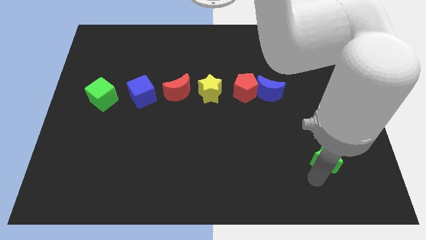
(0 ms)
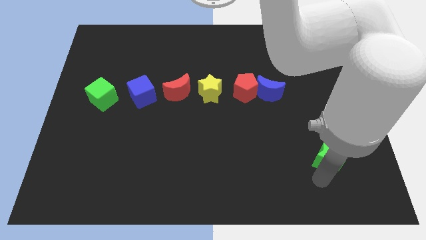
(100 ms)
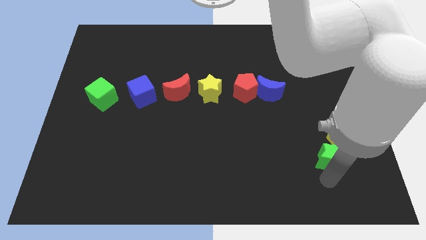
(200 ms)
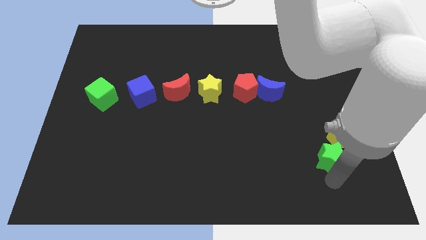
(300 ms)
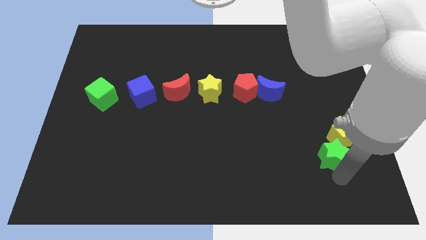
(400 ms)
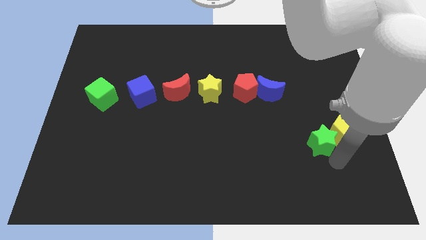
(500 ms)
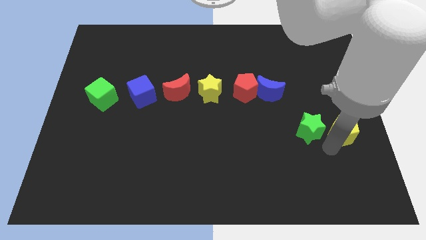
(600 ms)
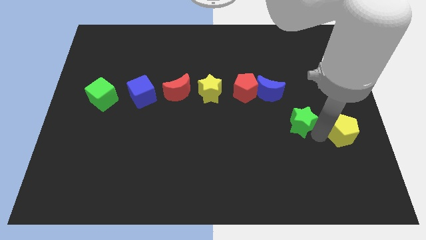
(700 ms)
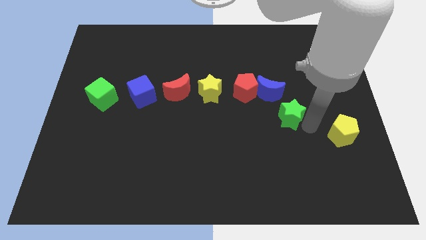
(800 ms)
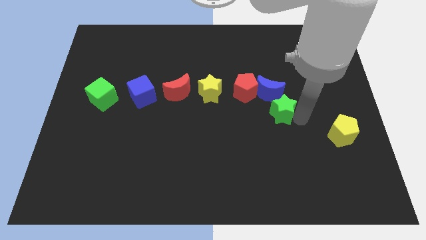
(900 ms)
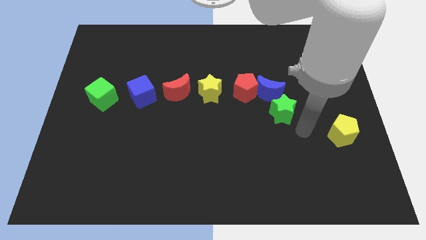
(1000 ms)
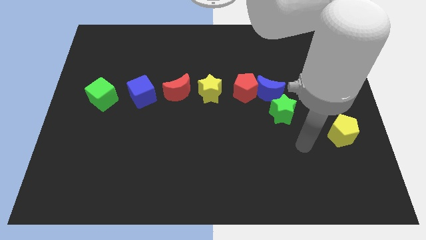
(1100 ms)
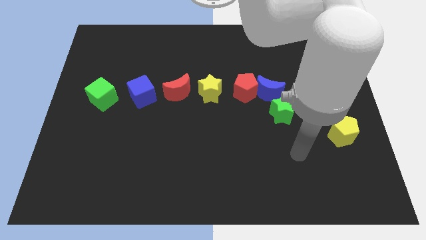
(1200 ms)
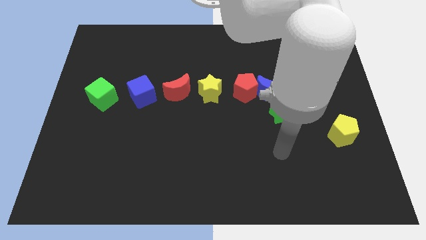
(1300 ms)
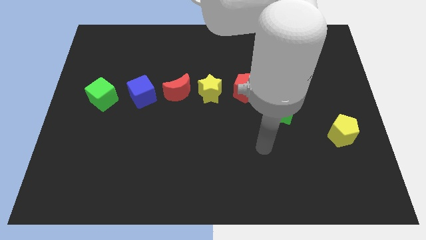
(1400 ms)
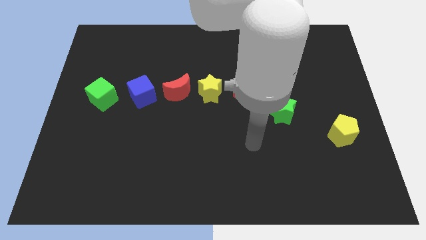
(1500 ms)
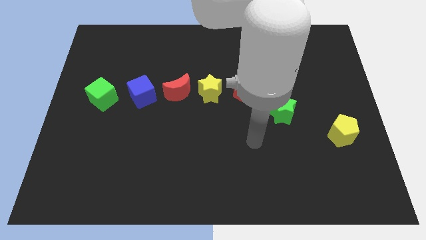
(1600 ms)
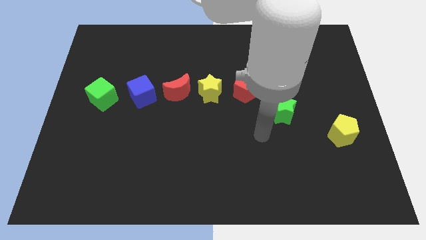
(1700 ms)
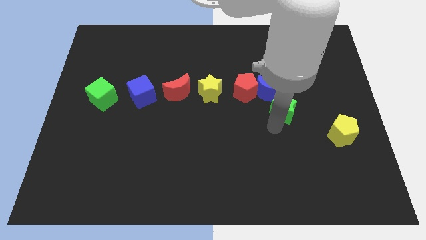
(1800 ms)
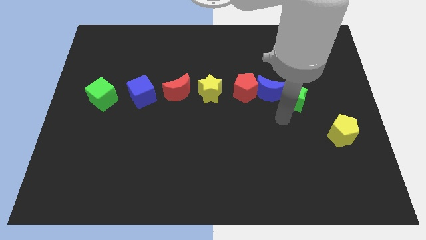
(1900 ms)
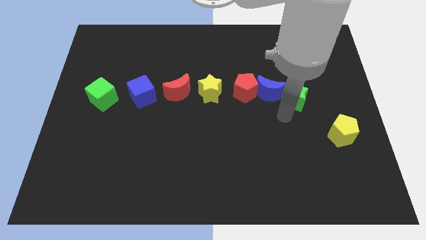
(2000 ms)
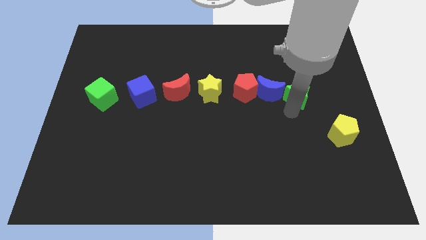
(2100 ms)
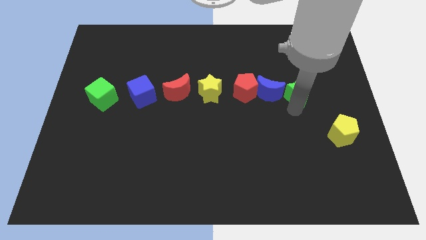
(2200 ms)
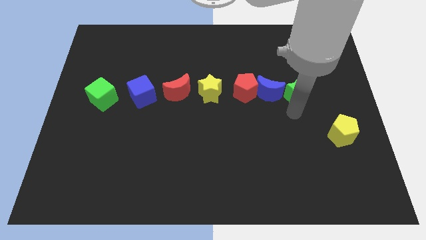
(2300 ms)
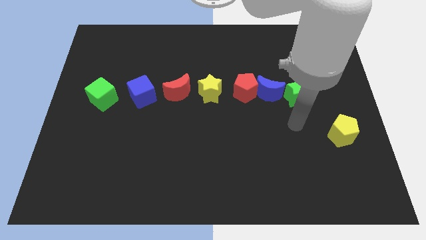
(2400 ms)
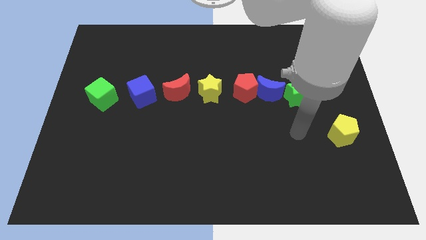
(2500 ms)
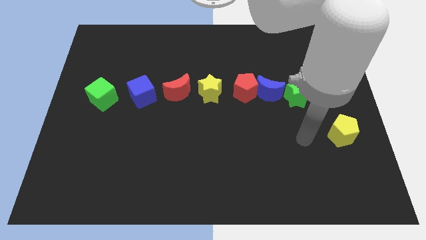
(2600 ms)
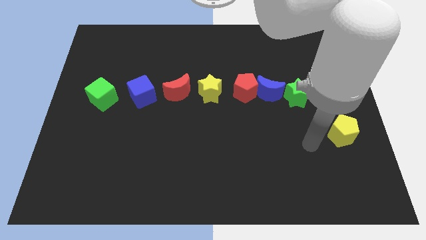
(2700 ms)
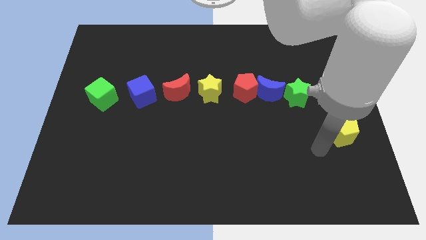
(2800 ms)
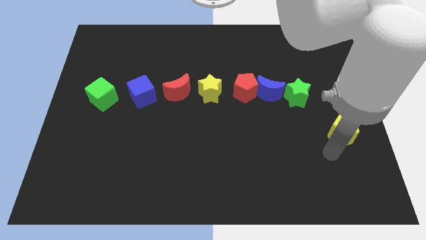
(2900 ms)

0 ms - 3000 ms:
place the green star near the blue crescent

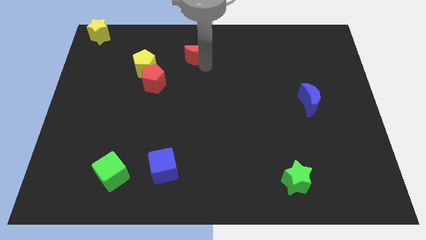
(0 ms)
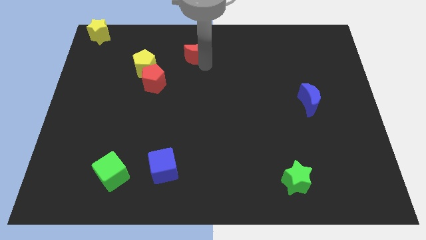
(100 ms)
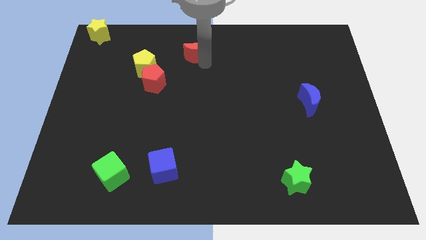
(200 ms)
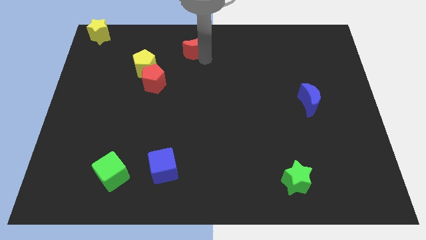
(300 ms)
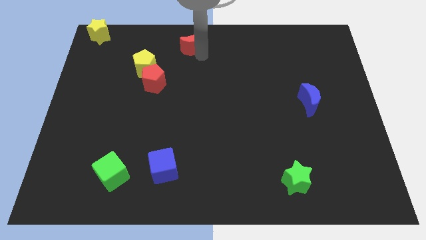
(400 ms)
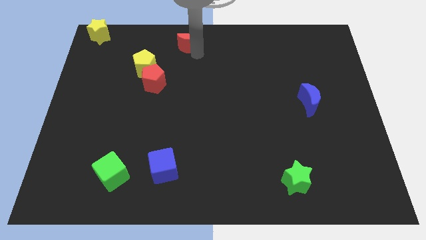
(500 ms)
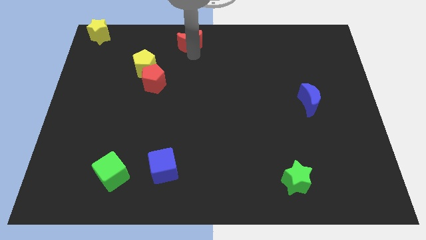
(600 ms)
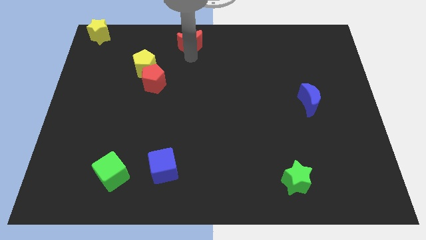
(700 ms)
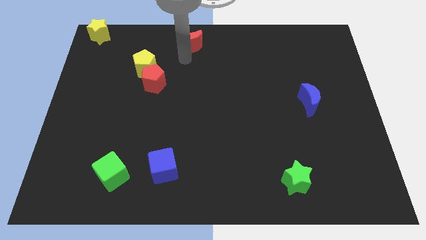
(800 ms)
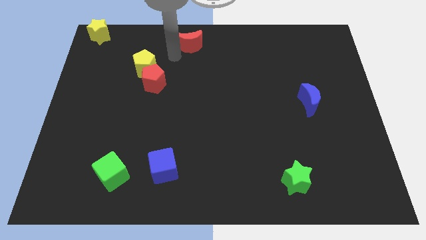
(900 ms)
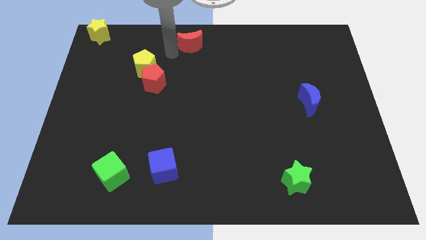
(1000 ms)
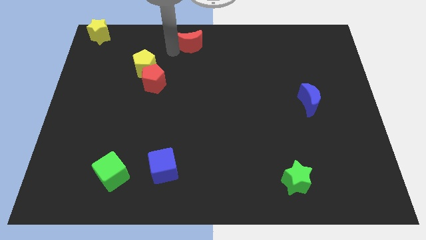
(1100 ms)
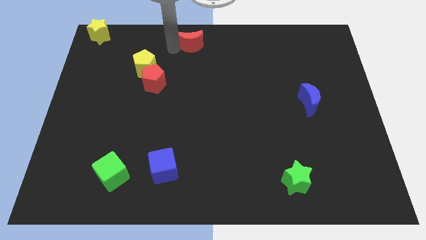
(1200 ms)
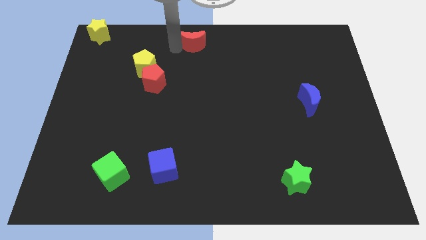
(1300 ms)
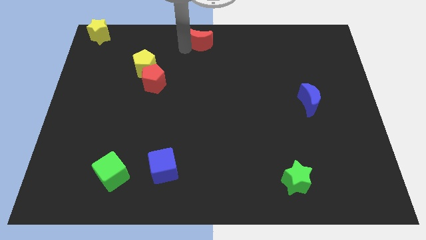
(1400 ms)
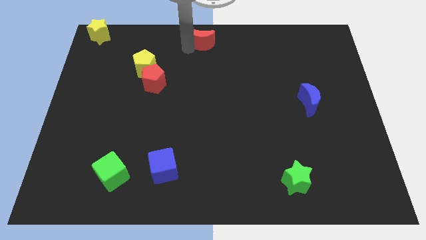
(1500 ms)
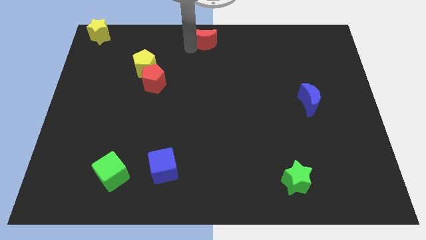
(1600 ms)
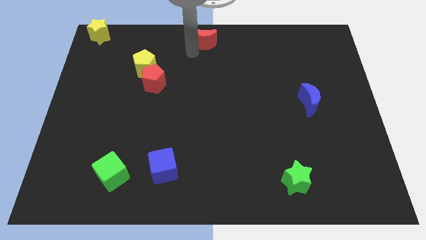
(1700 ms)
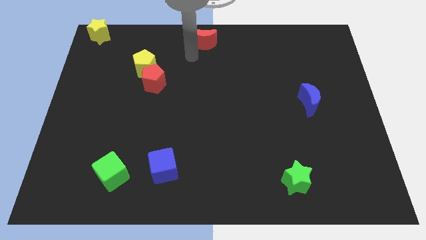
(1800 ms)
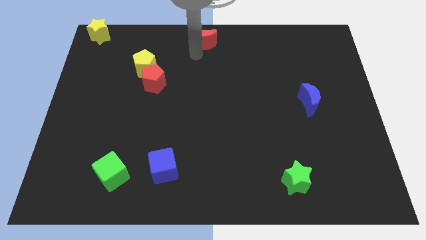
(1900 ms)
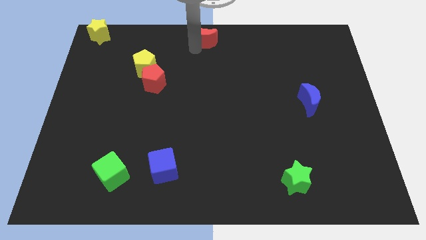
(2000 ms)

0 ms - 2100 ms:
push the red crescent to the top center of the board

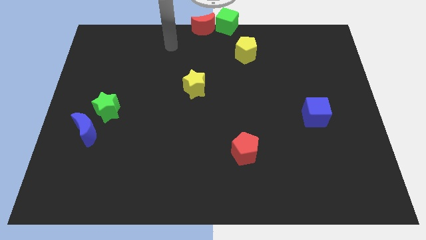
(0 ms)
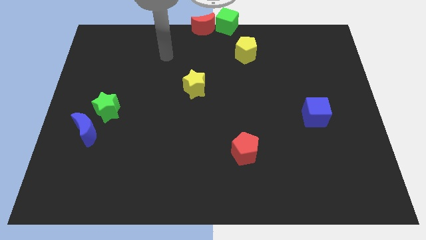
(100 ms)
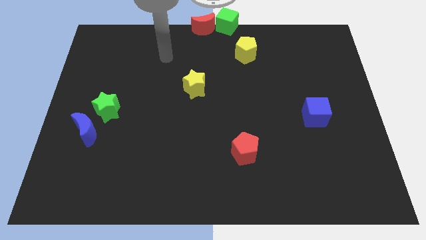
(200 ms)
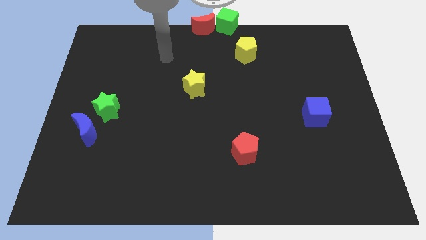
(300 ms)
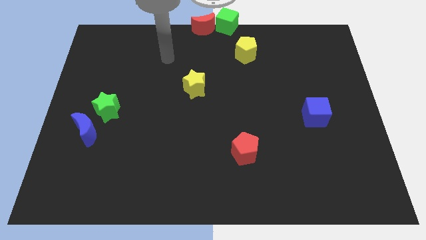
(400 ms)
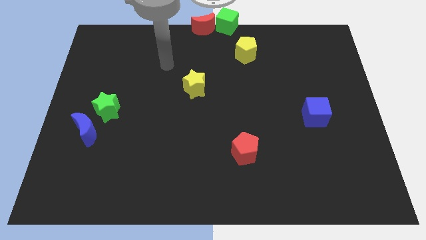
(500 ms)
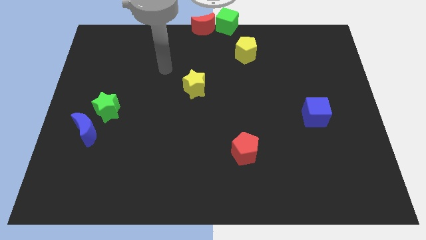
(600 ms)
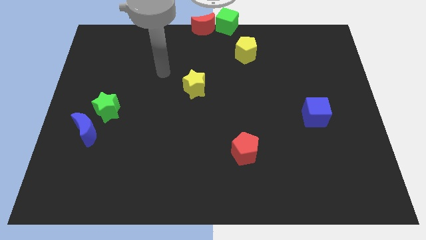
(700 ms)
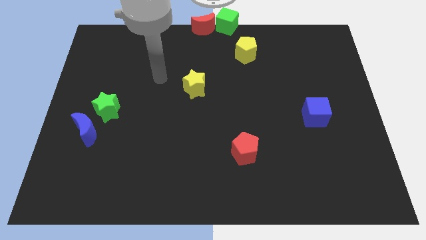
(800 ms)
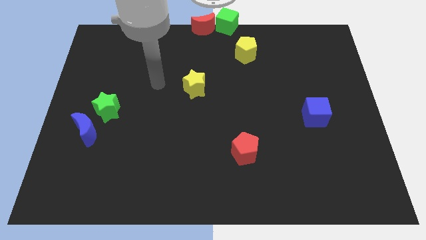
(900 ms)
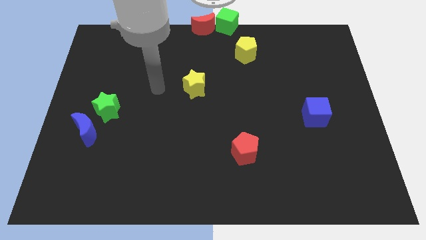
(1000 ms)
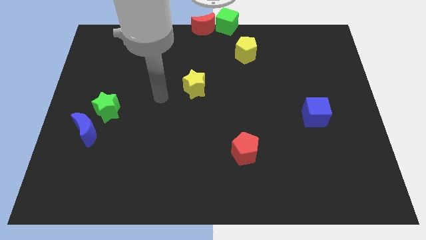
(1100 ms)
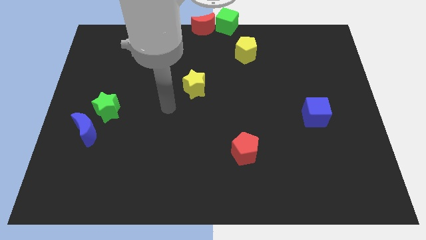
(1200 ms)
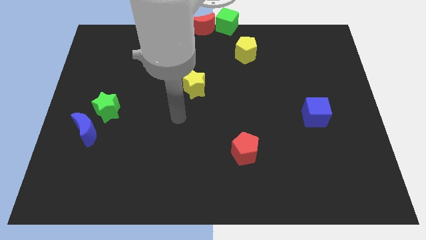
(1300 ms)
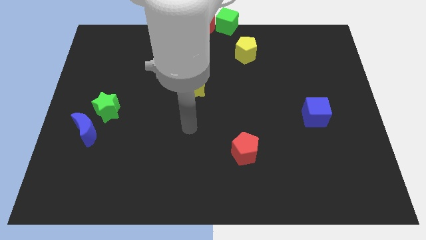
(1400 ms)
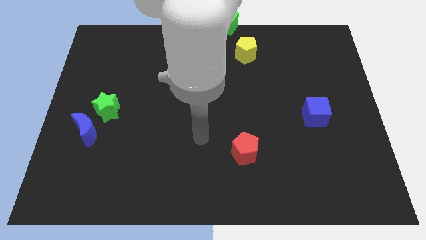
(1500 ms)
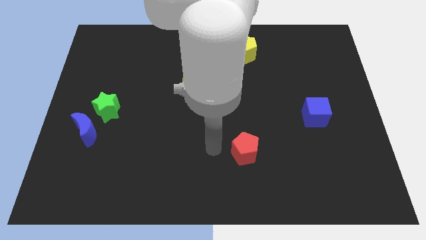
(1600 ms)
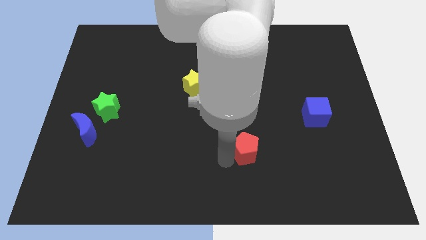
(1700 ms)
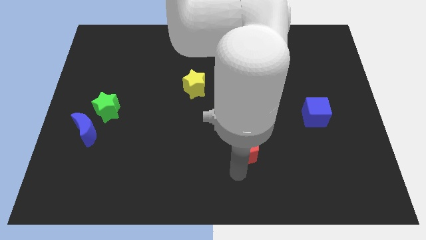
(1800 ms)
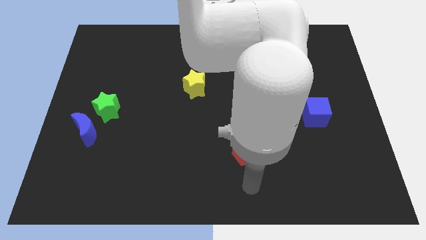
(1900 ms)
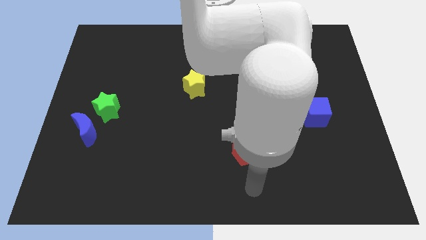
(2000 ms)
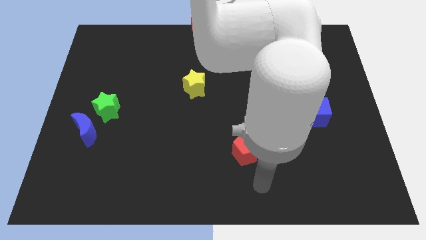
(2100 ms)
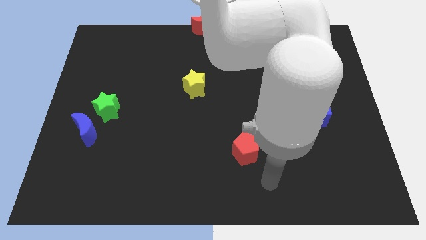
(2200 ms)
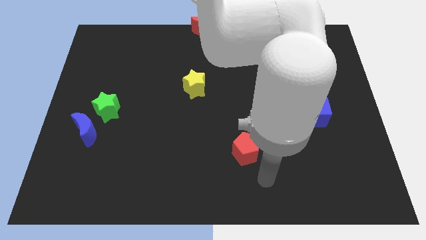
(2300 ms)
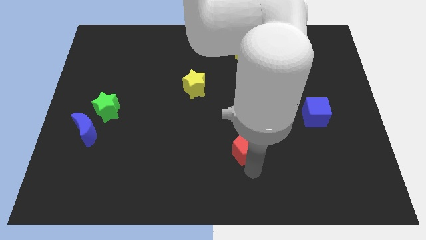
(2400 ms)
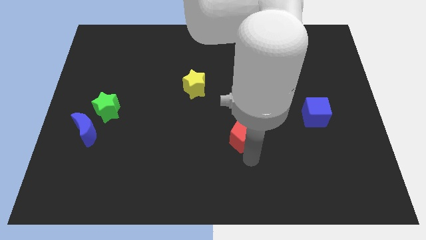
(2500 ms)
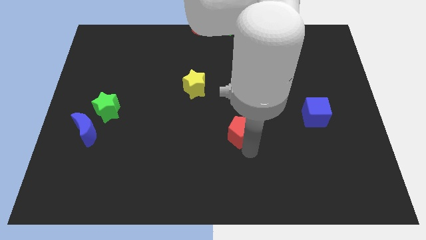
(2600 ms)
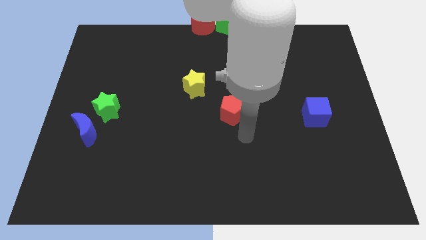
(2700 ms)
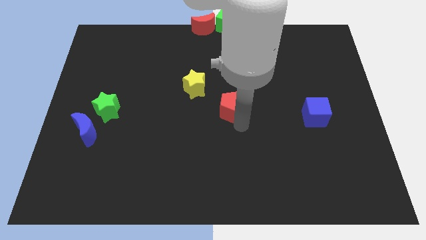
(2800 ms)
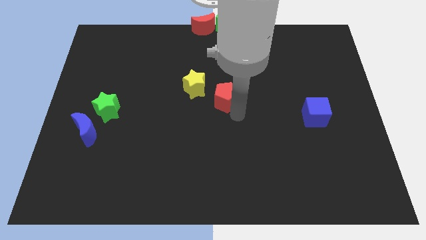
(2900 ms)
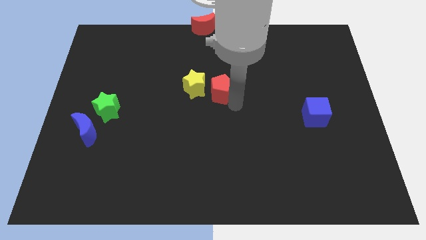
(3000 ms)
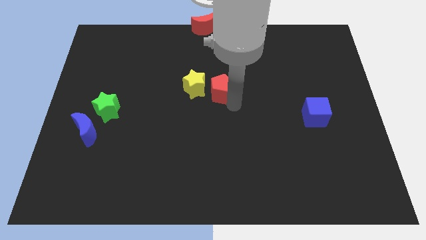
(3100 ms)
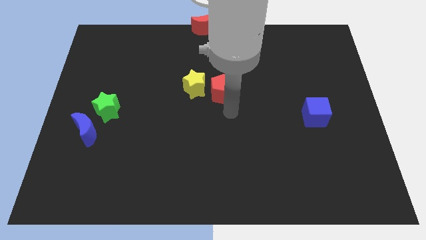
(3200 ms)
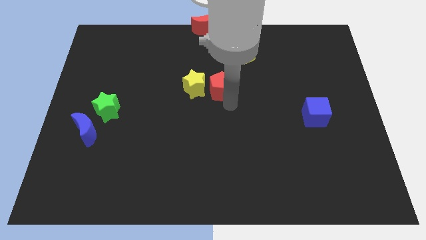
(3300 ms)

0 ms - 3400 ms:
move the red pentagon to the right side of the yellow star

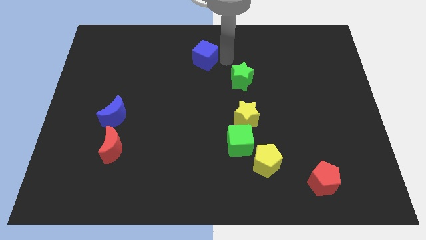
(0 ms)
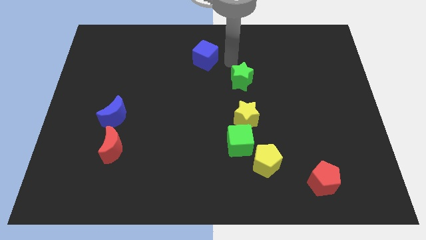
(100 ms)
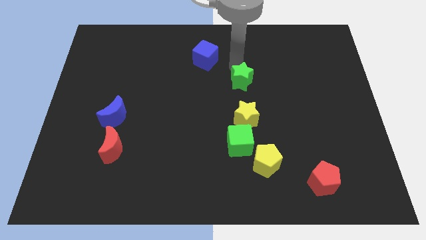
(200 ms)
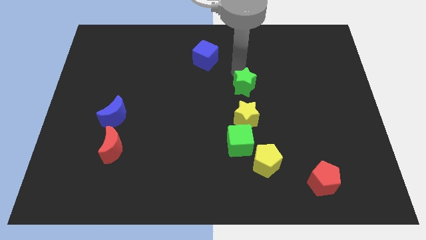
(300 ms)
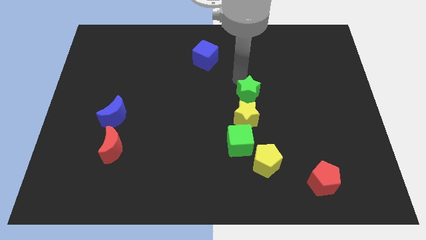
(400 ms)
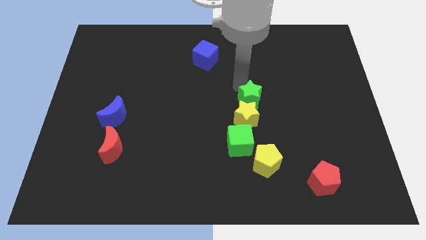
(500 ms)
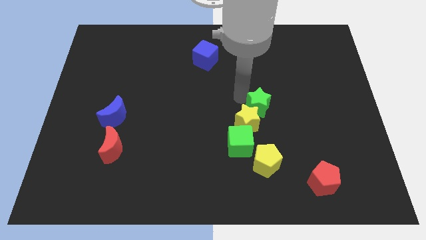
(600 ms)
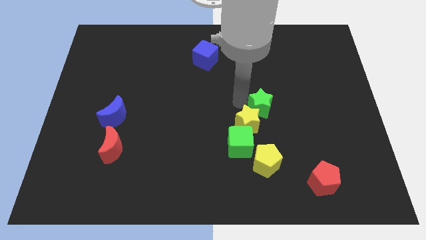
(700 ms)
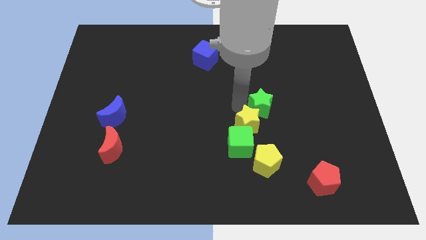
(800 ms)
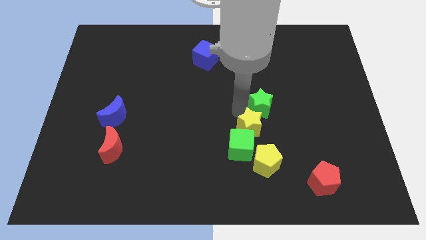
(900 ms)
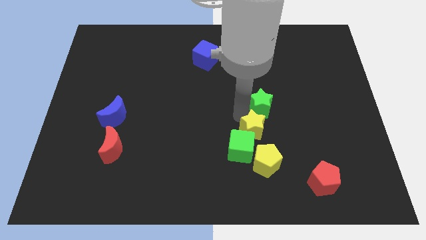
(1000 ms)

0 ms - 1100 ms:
push green star towards yellow star
